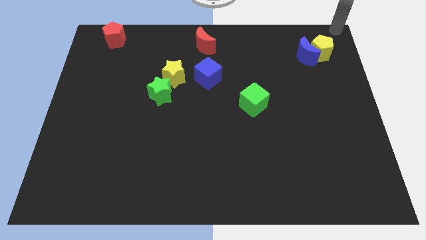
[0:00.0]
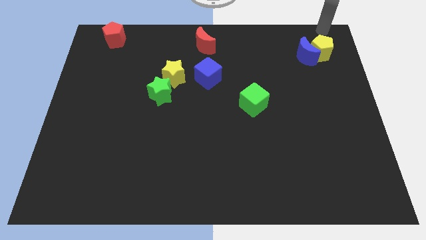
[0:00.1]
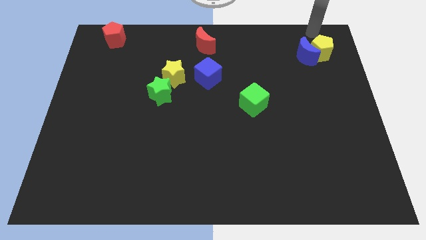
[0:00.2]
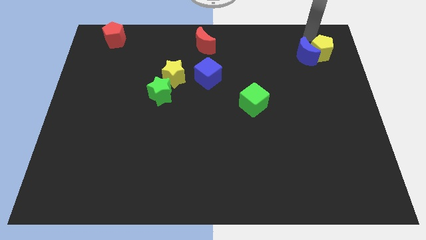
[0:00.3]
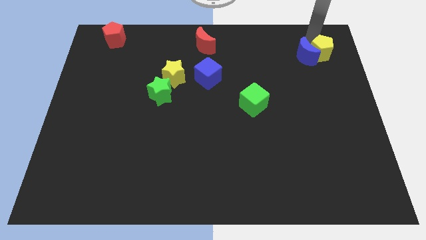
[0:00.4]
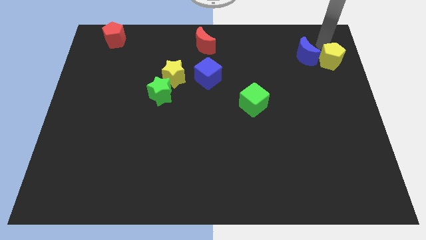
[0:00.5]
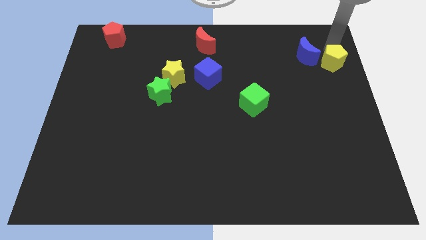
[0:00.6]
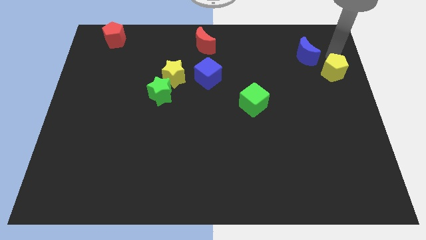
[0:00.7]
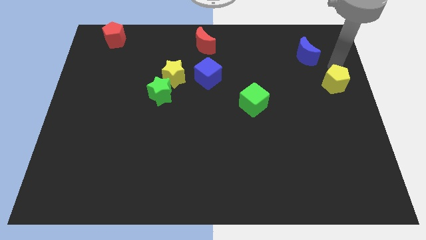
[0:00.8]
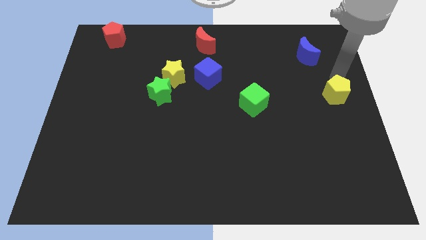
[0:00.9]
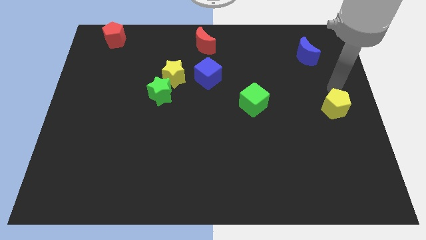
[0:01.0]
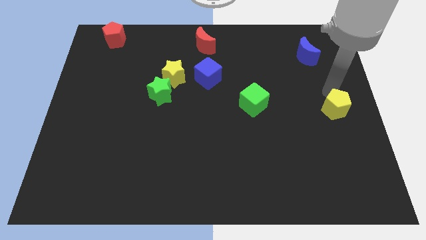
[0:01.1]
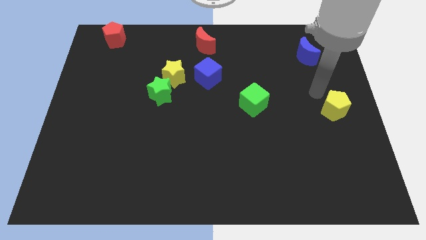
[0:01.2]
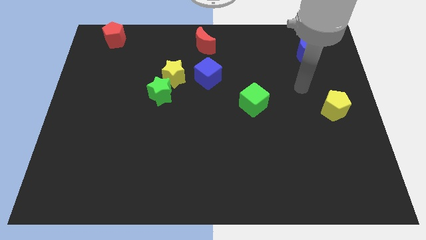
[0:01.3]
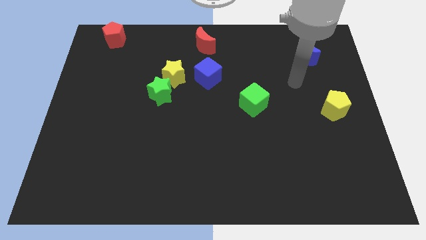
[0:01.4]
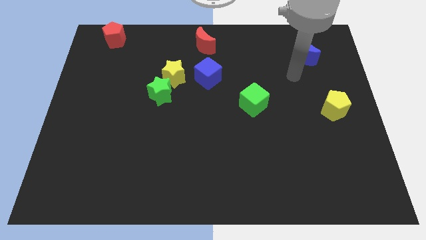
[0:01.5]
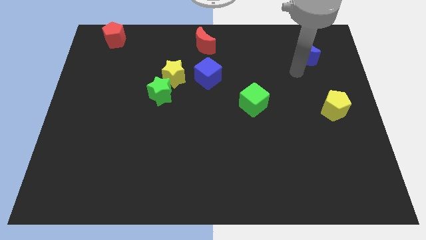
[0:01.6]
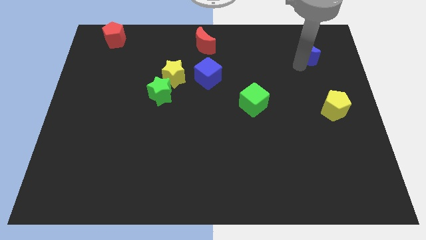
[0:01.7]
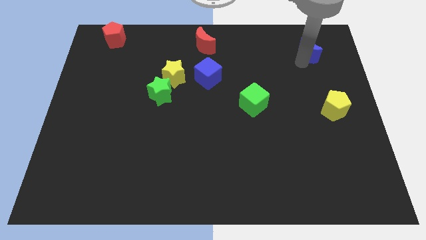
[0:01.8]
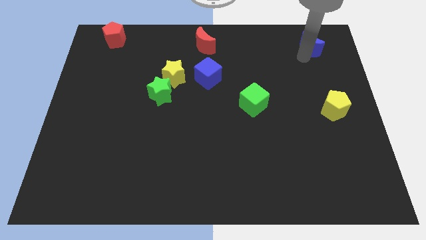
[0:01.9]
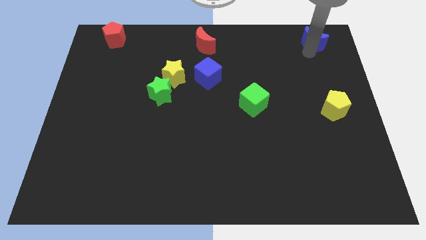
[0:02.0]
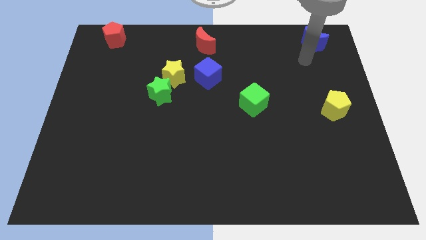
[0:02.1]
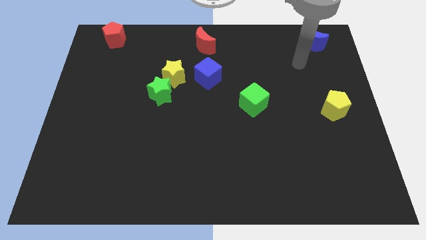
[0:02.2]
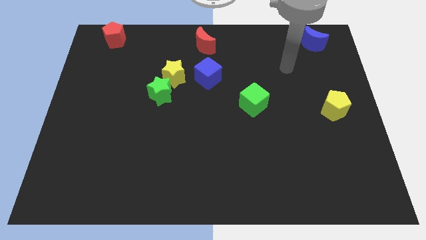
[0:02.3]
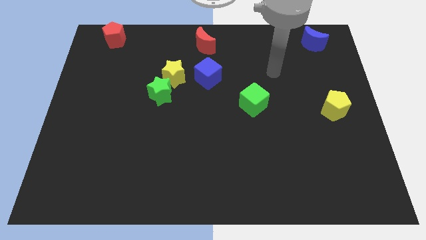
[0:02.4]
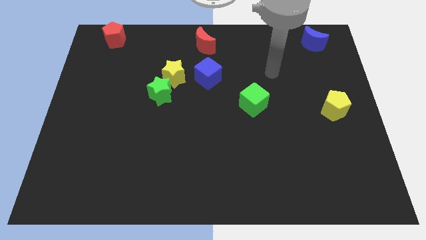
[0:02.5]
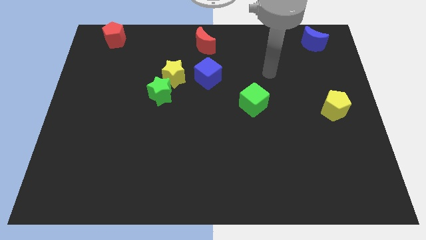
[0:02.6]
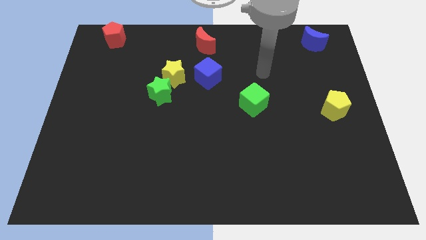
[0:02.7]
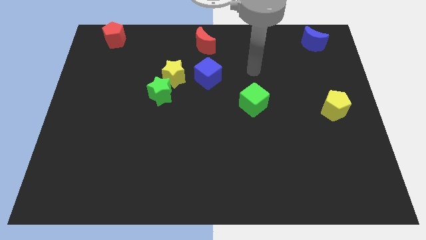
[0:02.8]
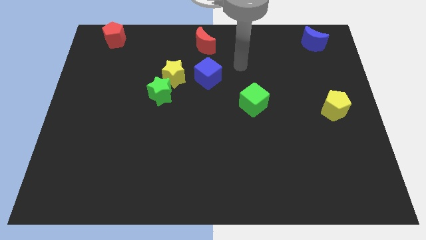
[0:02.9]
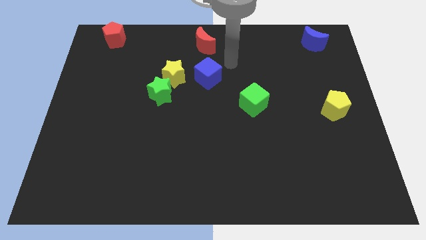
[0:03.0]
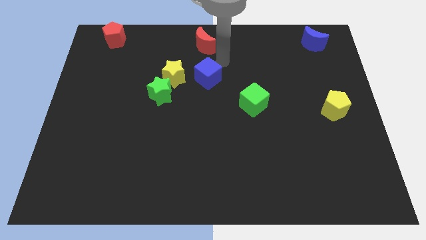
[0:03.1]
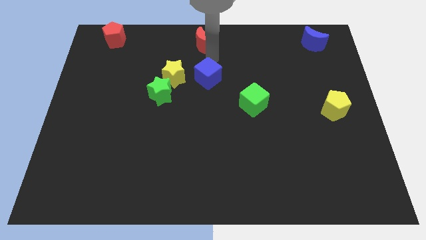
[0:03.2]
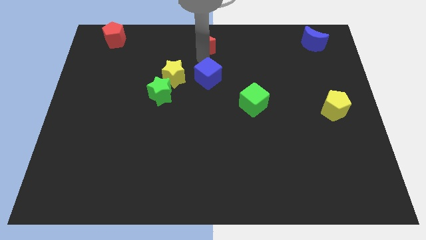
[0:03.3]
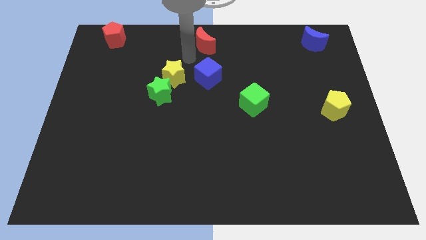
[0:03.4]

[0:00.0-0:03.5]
separate yellow pentagon from blue crescent

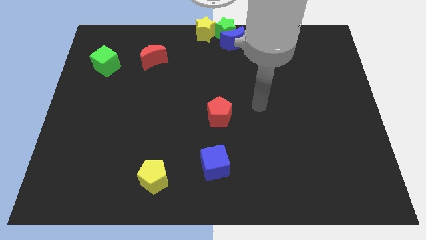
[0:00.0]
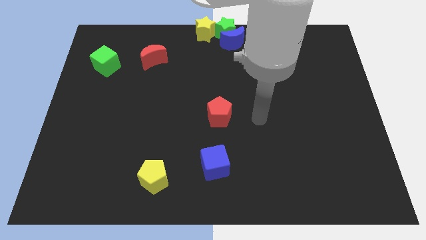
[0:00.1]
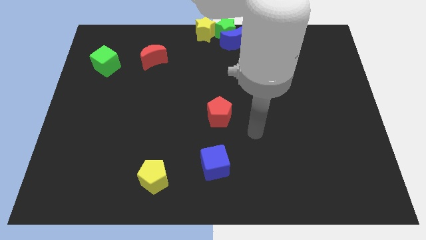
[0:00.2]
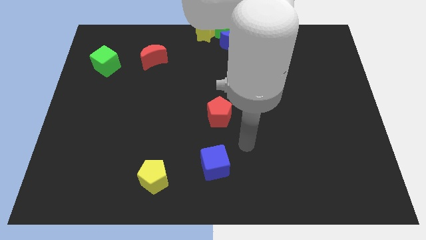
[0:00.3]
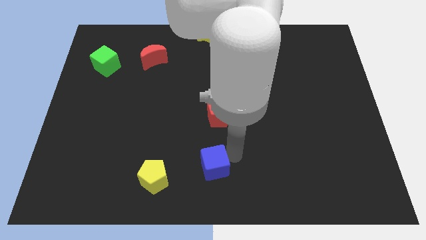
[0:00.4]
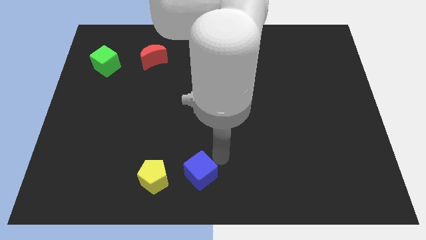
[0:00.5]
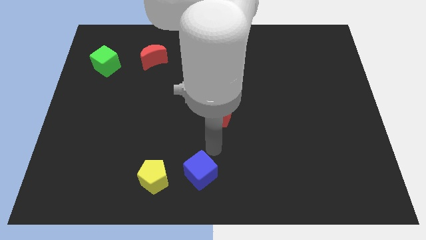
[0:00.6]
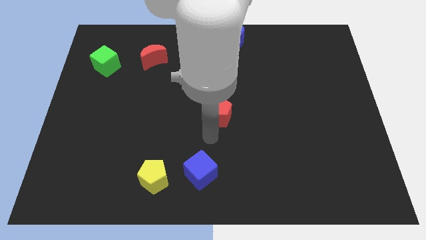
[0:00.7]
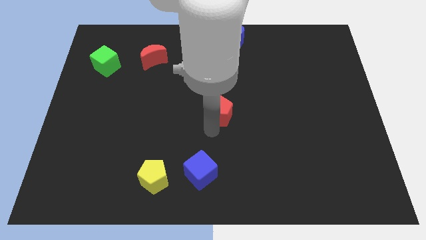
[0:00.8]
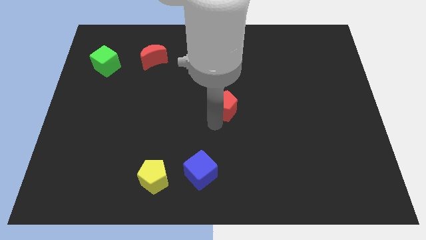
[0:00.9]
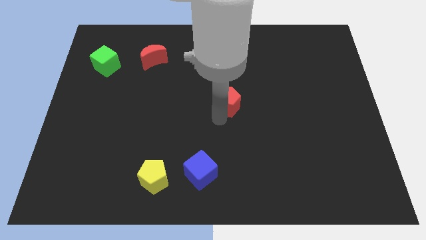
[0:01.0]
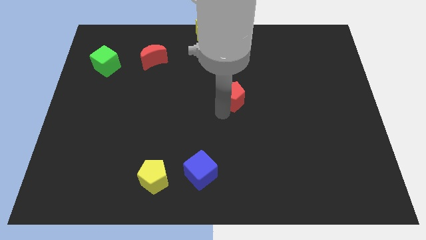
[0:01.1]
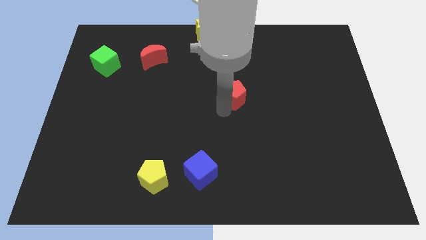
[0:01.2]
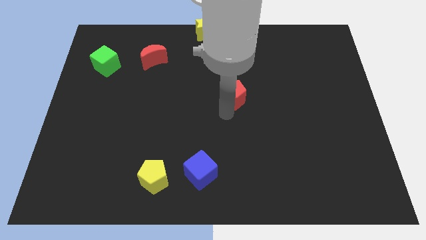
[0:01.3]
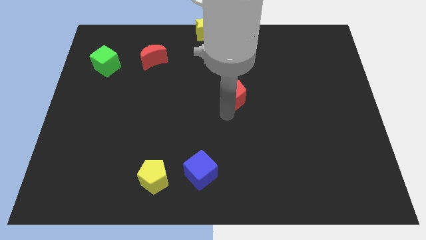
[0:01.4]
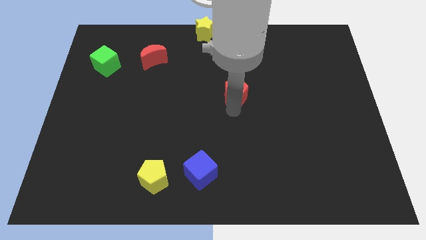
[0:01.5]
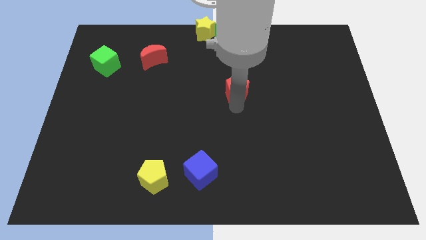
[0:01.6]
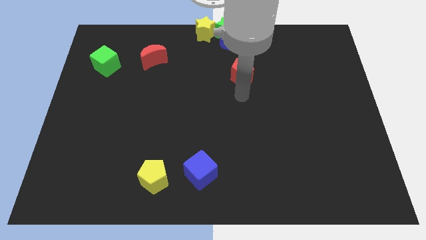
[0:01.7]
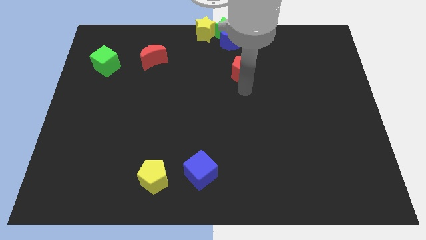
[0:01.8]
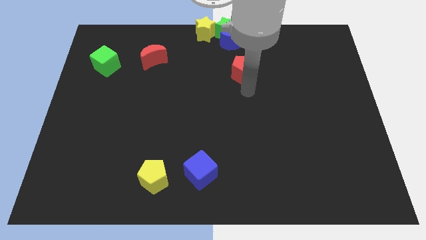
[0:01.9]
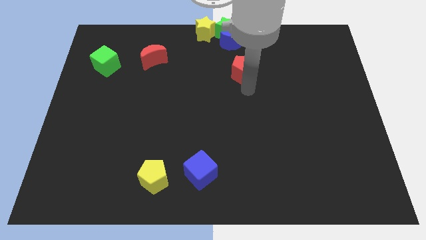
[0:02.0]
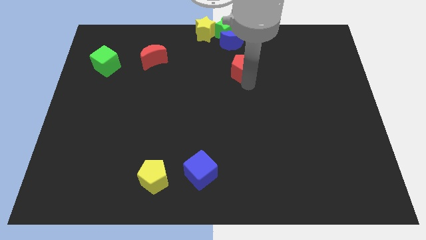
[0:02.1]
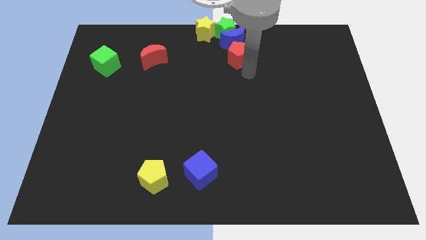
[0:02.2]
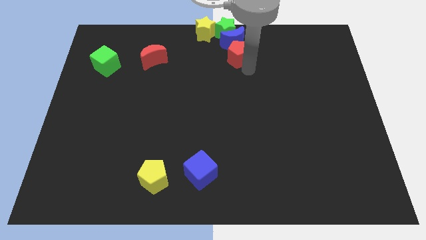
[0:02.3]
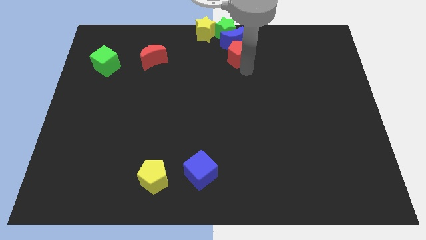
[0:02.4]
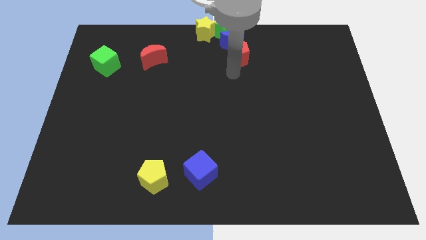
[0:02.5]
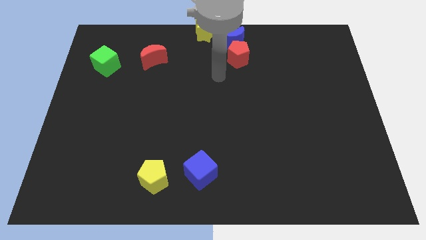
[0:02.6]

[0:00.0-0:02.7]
place red pentagon to the bottom of blue moon

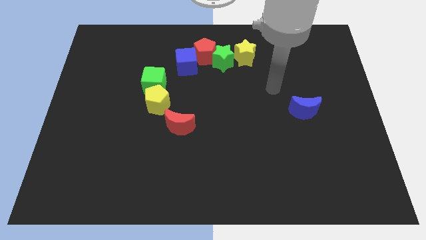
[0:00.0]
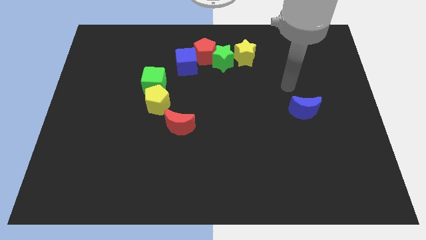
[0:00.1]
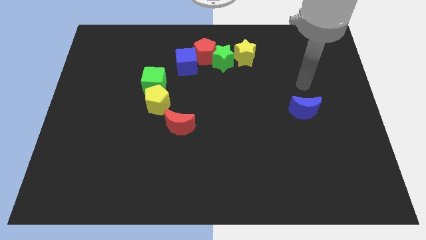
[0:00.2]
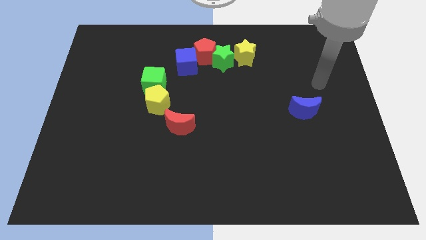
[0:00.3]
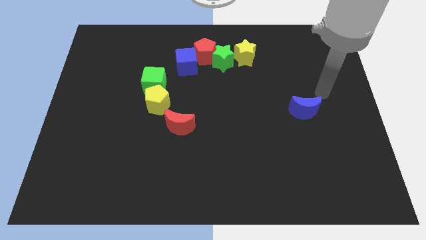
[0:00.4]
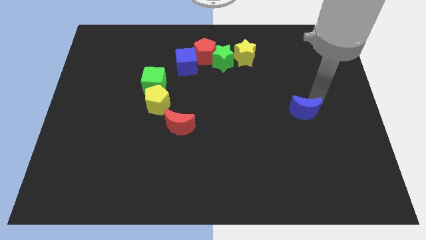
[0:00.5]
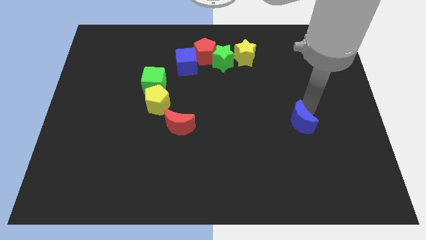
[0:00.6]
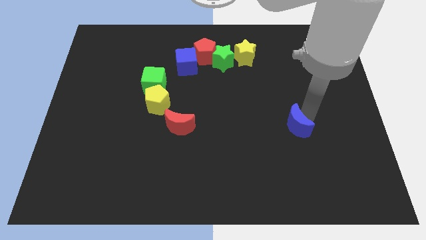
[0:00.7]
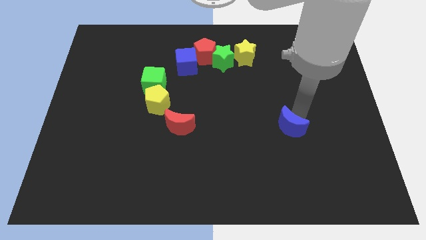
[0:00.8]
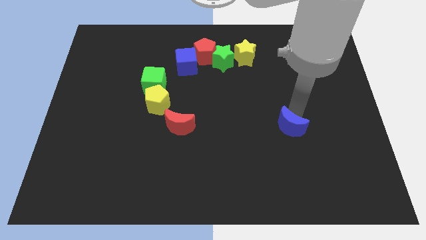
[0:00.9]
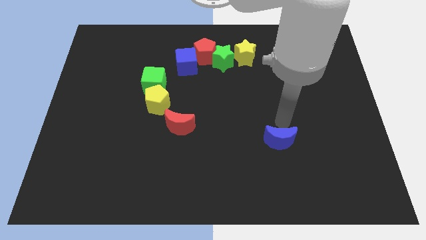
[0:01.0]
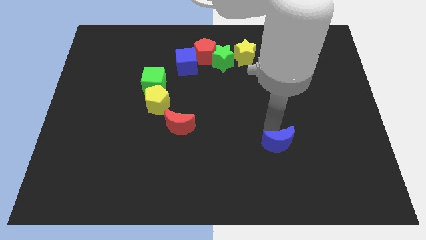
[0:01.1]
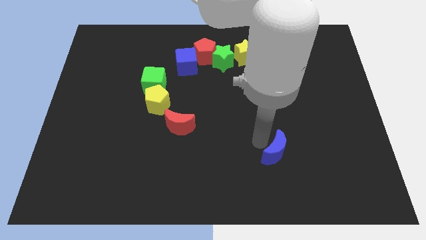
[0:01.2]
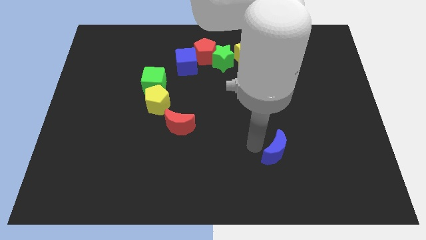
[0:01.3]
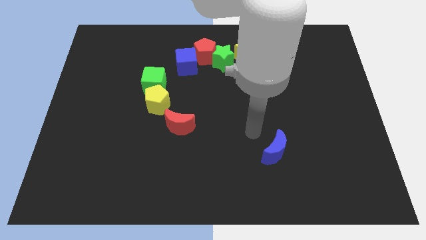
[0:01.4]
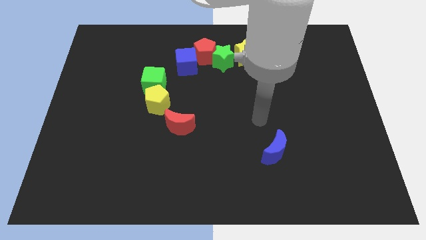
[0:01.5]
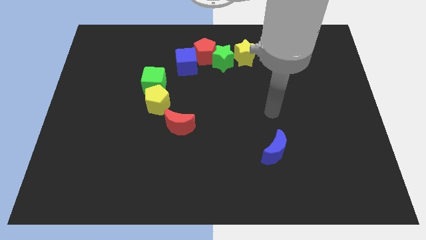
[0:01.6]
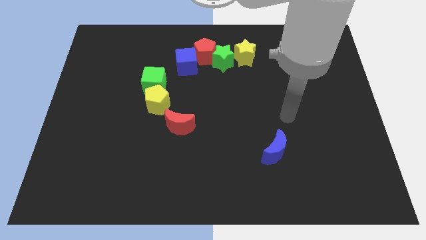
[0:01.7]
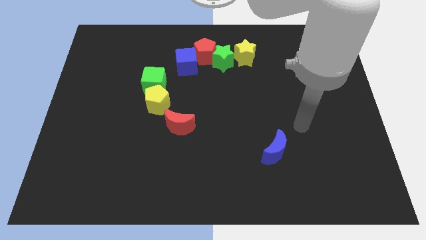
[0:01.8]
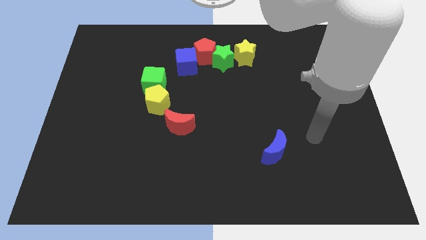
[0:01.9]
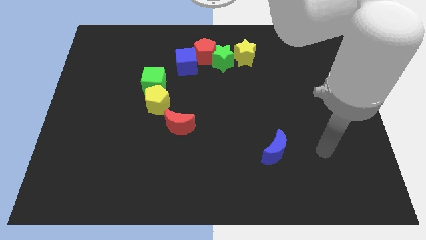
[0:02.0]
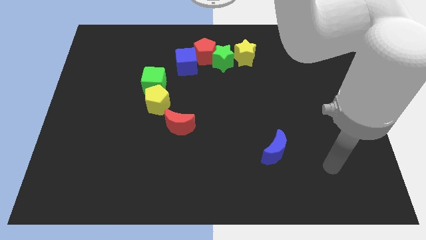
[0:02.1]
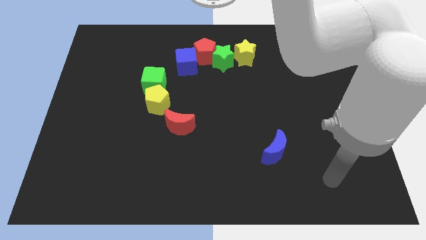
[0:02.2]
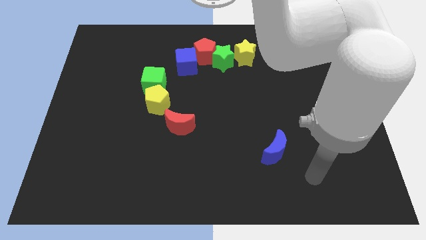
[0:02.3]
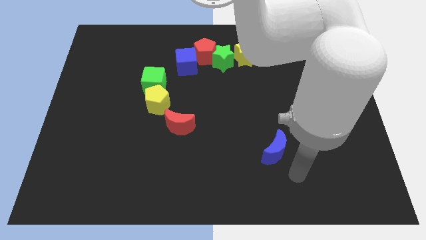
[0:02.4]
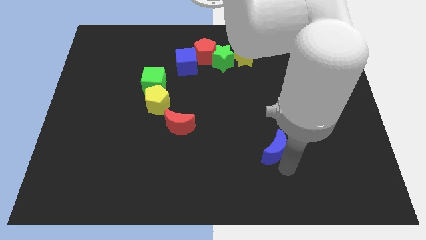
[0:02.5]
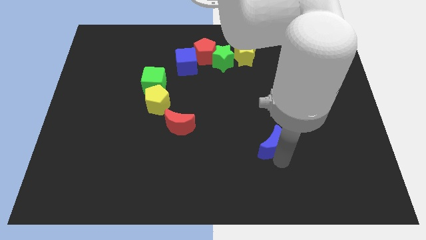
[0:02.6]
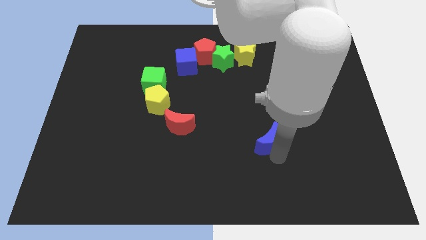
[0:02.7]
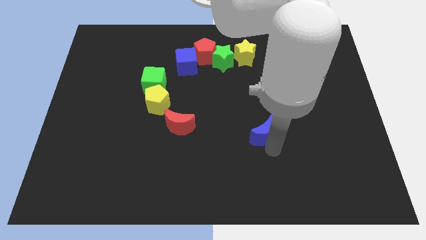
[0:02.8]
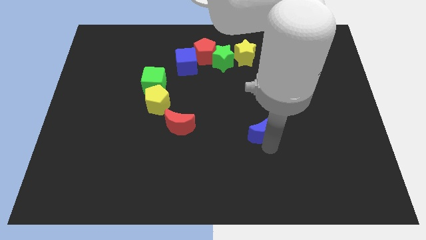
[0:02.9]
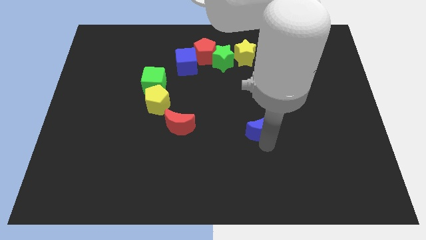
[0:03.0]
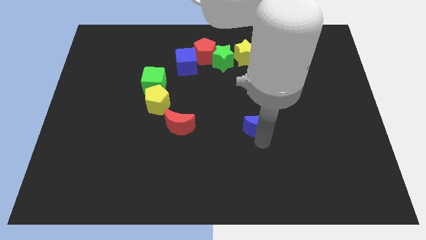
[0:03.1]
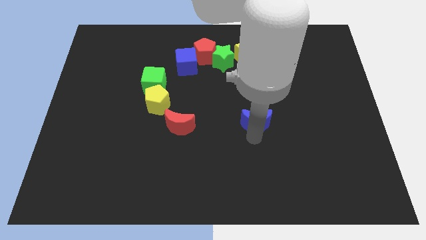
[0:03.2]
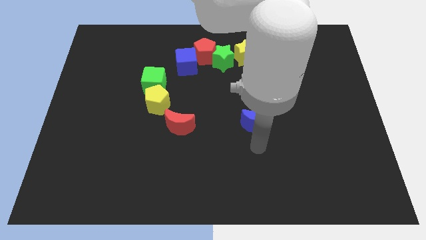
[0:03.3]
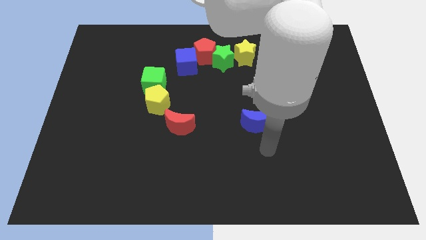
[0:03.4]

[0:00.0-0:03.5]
put the blue crescent horizontally to the right side of the red moon
